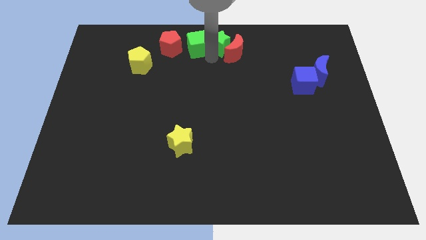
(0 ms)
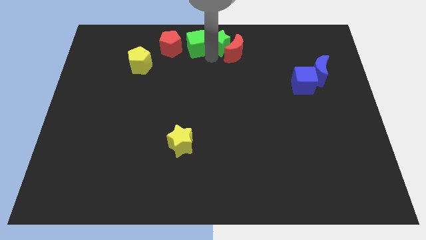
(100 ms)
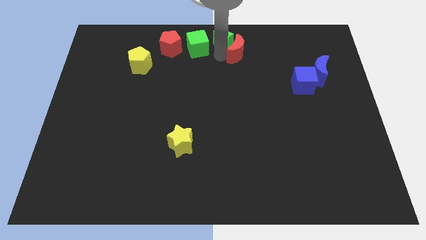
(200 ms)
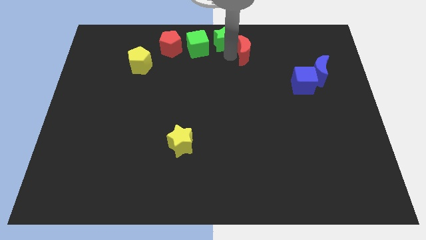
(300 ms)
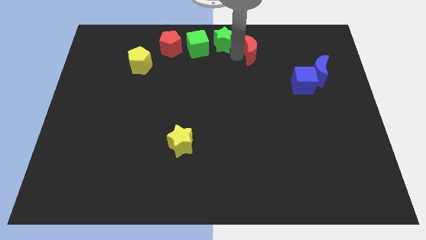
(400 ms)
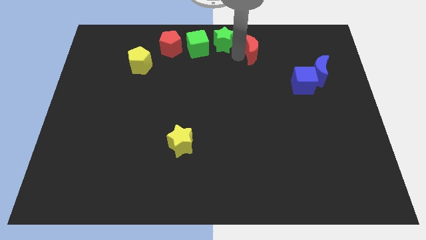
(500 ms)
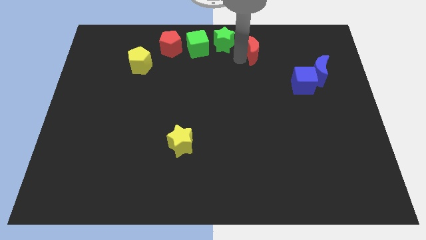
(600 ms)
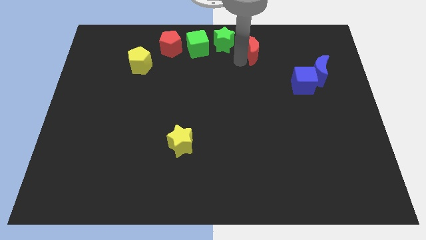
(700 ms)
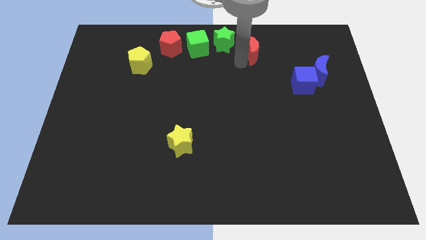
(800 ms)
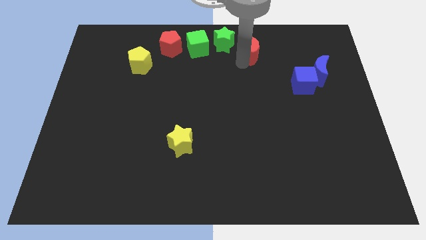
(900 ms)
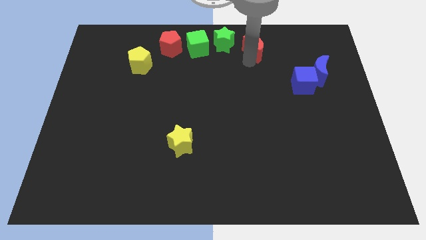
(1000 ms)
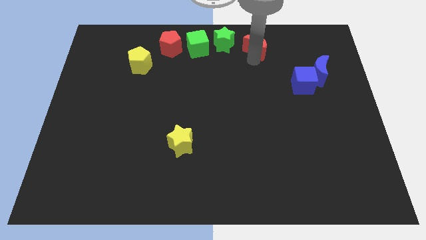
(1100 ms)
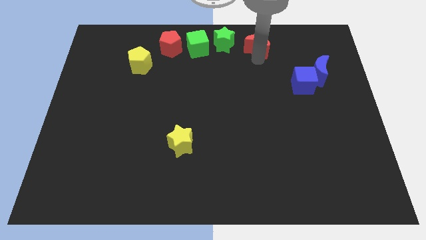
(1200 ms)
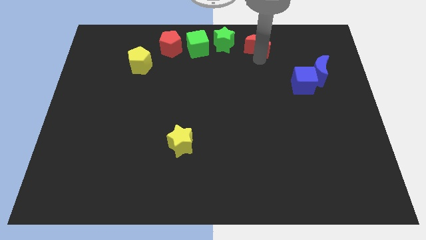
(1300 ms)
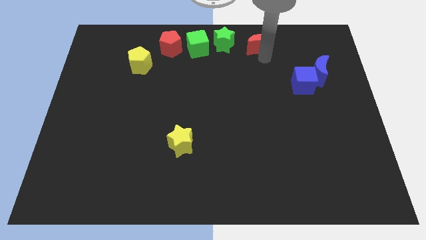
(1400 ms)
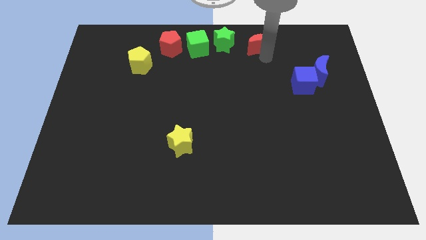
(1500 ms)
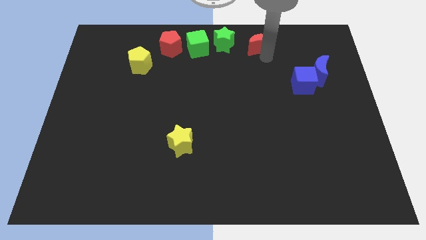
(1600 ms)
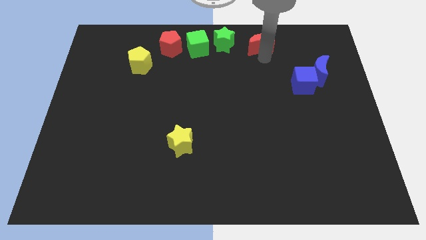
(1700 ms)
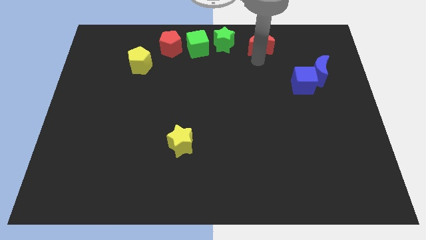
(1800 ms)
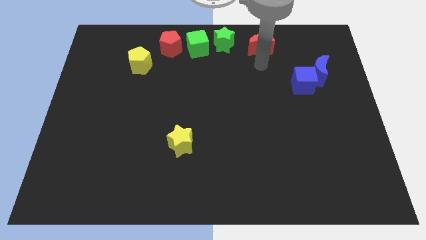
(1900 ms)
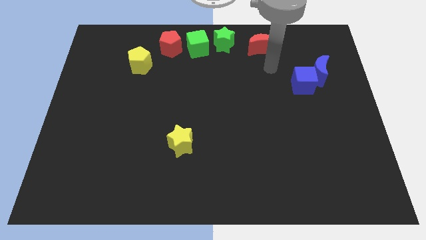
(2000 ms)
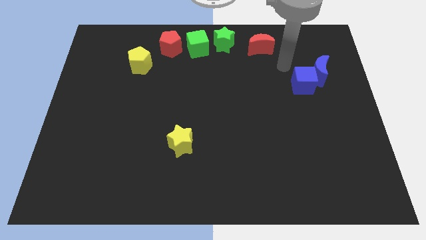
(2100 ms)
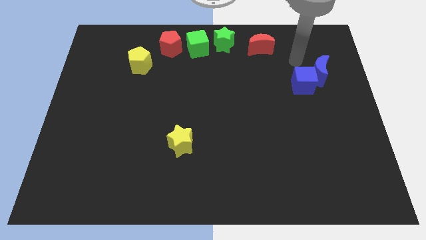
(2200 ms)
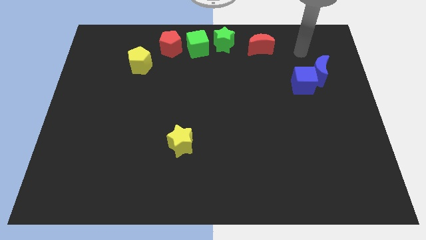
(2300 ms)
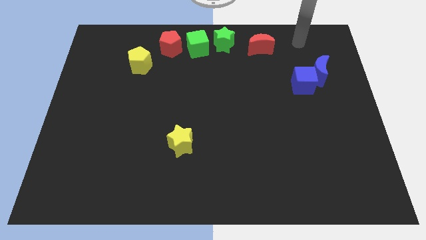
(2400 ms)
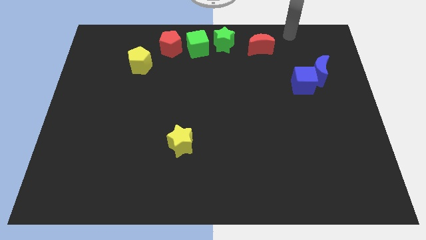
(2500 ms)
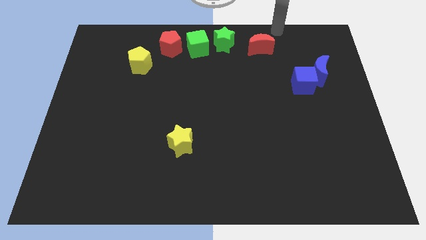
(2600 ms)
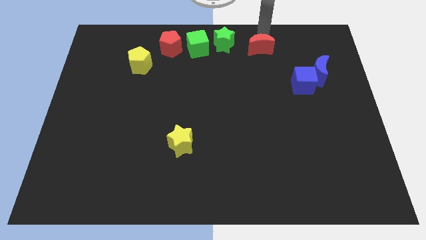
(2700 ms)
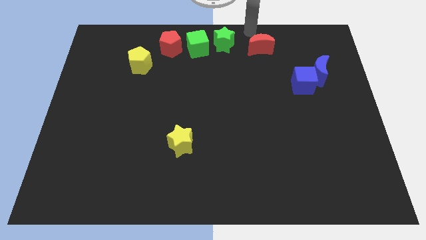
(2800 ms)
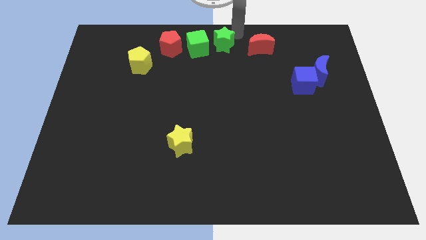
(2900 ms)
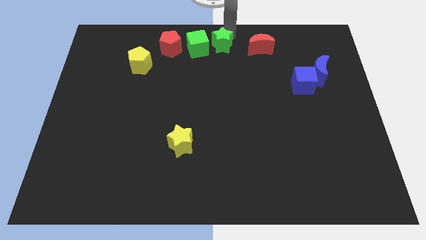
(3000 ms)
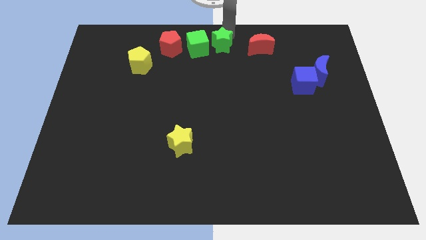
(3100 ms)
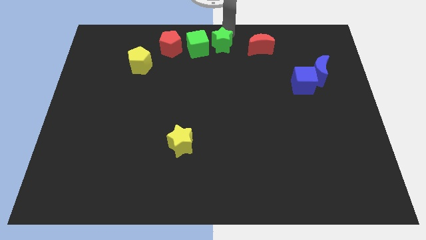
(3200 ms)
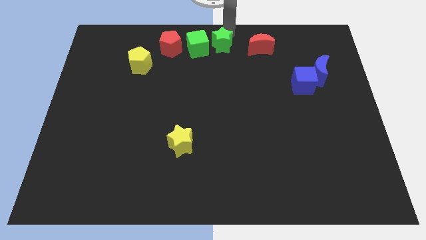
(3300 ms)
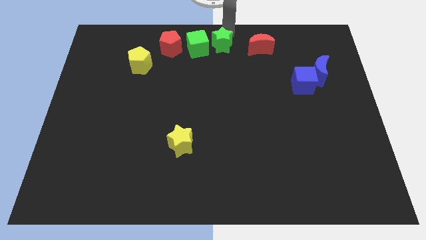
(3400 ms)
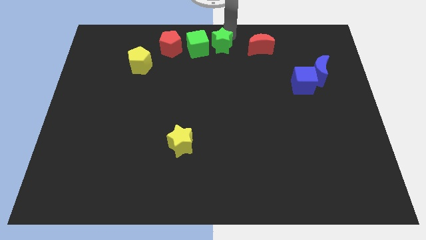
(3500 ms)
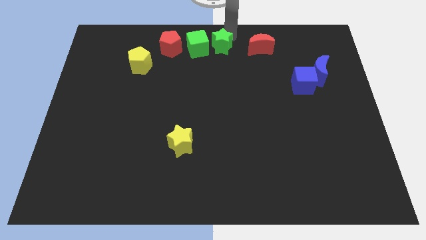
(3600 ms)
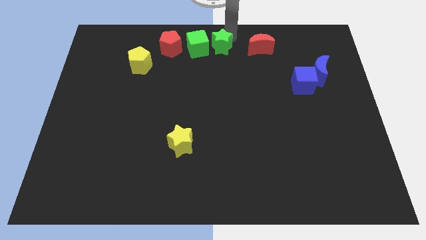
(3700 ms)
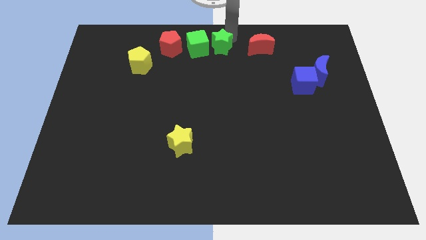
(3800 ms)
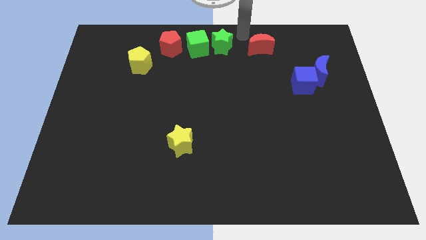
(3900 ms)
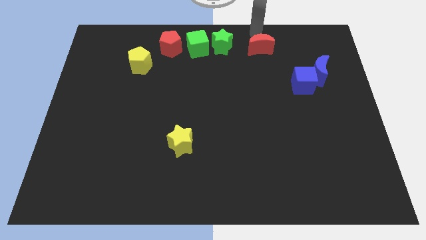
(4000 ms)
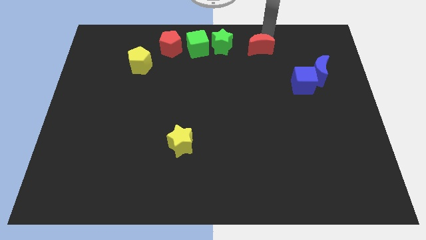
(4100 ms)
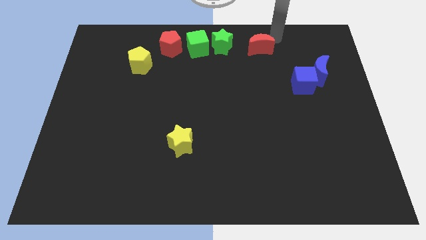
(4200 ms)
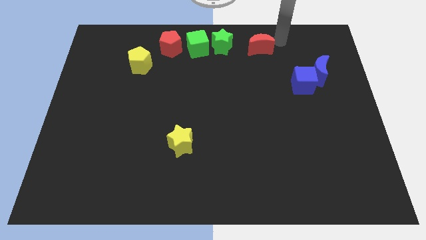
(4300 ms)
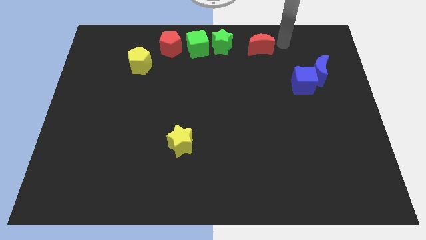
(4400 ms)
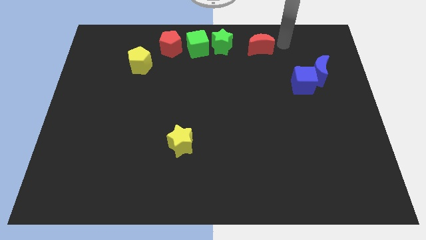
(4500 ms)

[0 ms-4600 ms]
adjust green blocks and the red moon away from each other

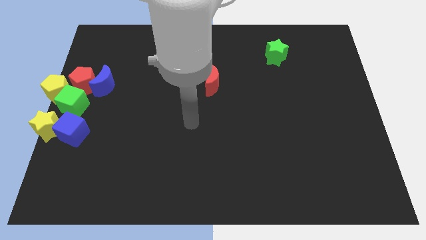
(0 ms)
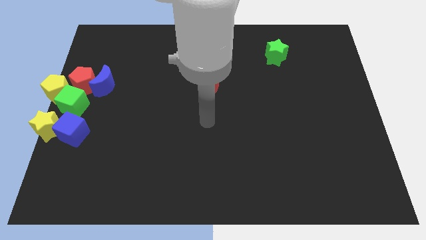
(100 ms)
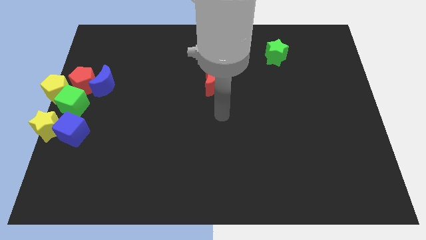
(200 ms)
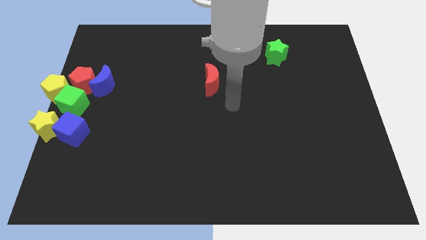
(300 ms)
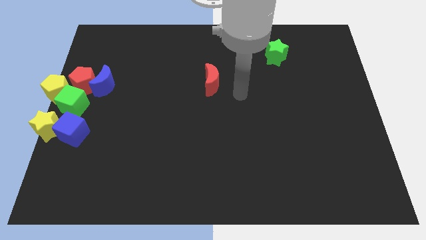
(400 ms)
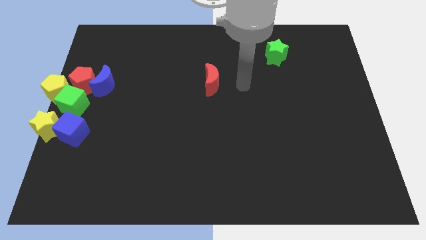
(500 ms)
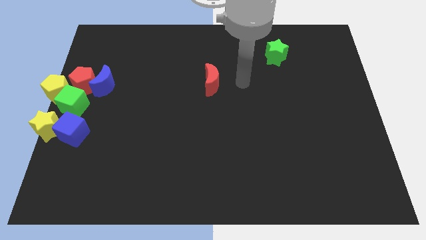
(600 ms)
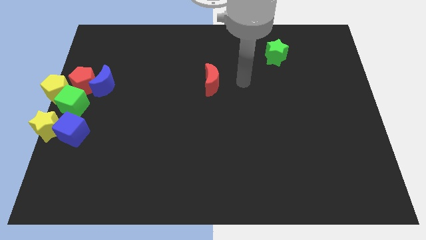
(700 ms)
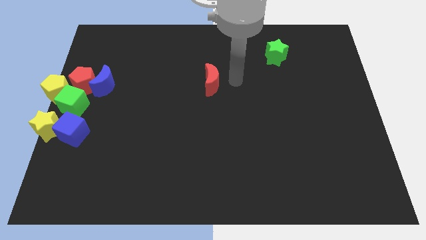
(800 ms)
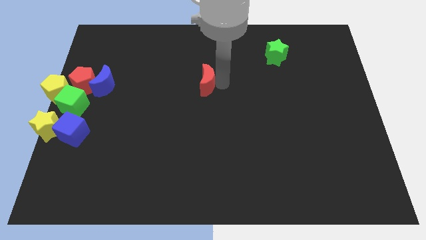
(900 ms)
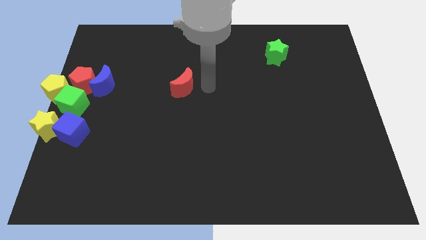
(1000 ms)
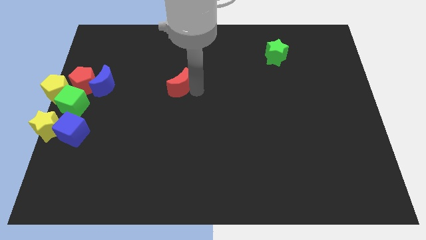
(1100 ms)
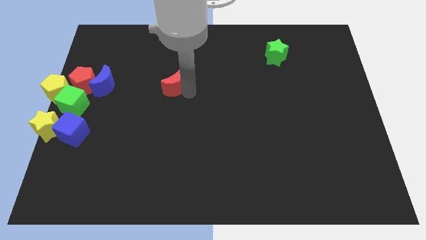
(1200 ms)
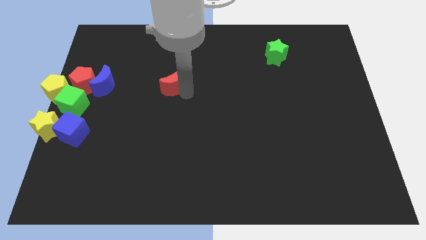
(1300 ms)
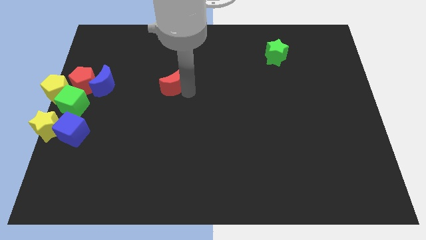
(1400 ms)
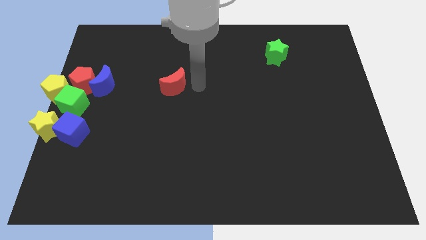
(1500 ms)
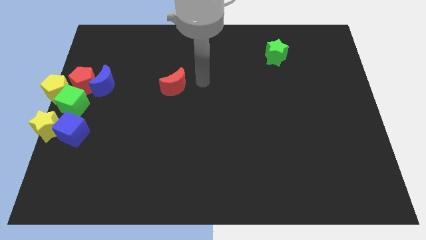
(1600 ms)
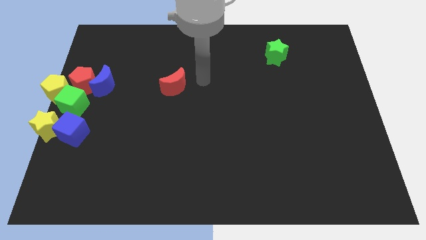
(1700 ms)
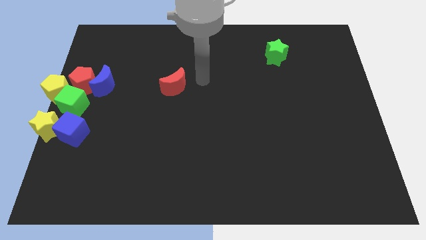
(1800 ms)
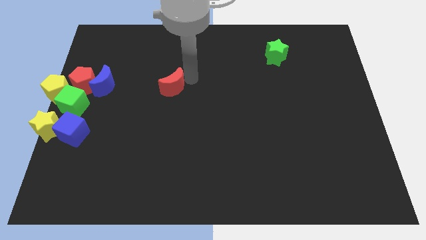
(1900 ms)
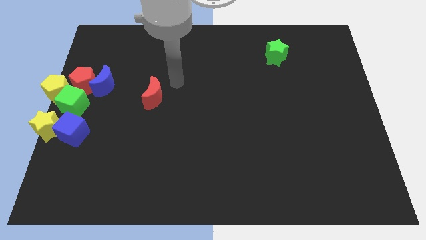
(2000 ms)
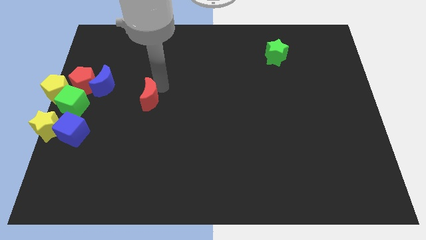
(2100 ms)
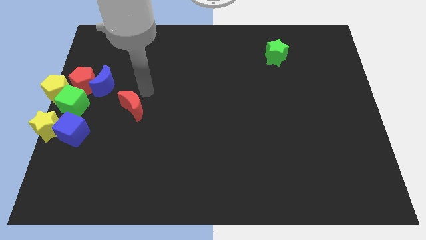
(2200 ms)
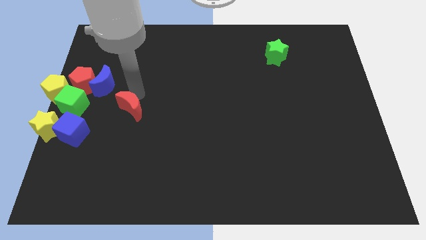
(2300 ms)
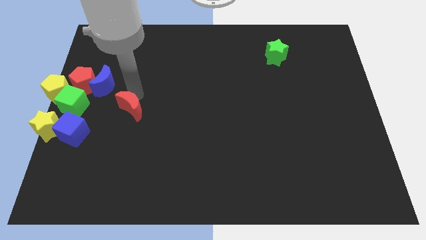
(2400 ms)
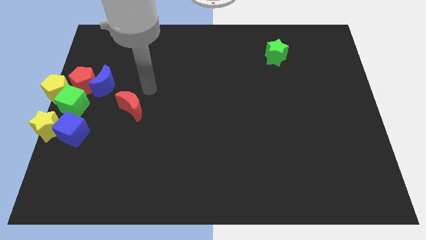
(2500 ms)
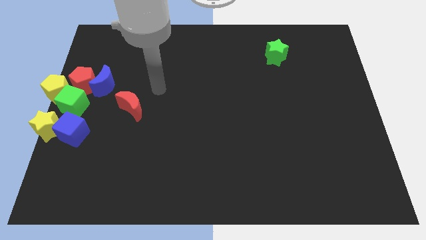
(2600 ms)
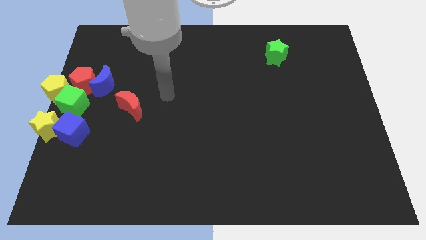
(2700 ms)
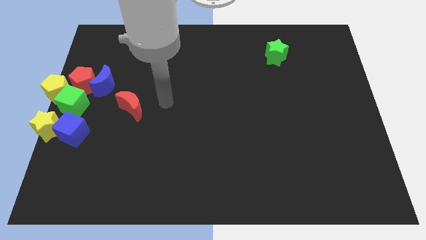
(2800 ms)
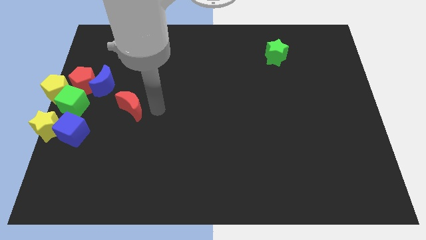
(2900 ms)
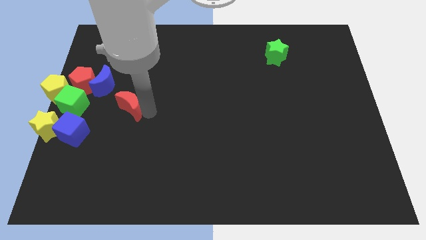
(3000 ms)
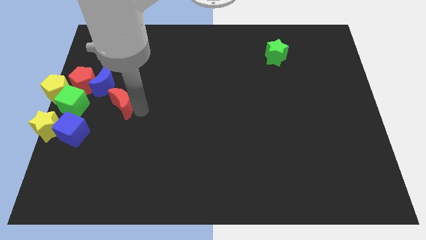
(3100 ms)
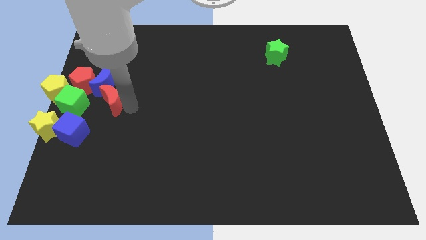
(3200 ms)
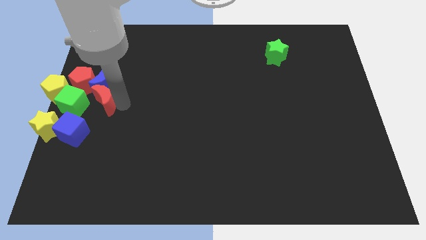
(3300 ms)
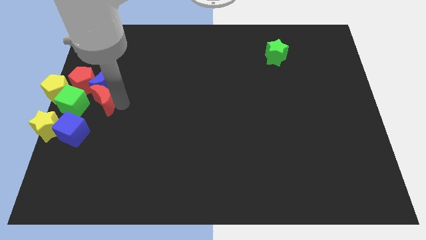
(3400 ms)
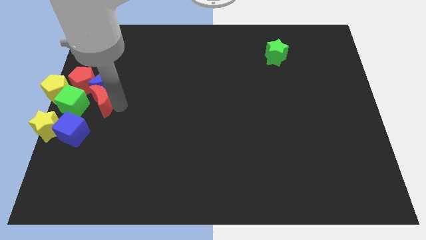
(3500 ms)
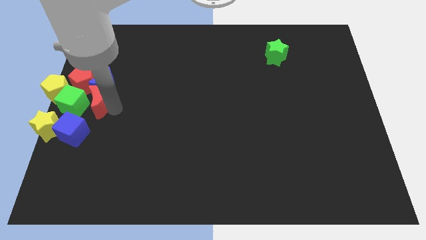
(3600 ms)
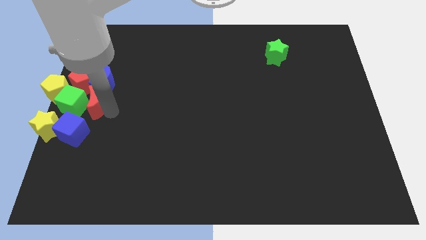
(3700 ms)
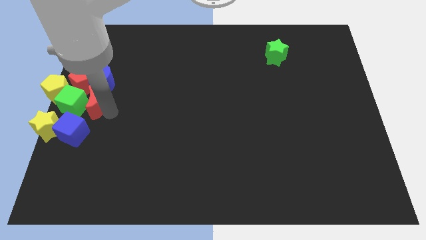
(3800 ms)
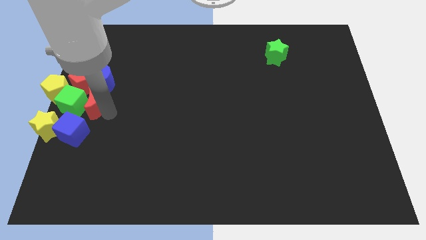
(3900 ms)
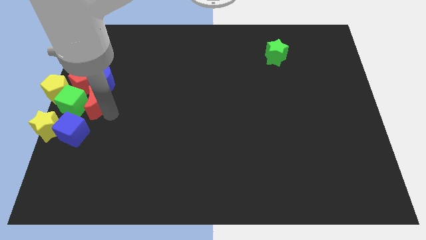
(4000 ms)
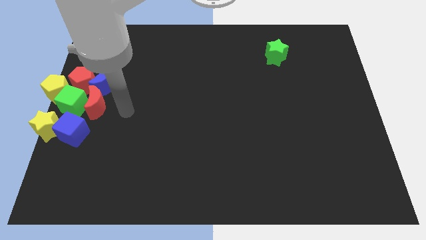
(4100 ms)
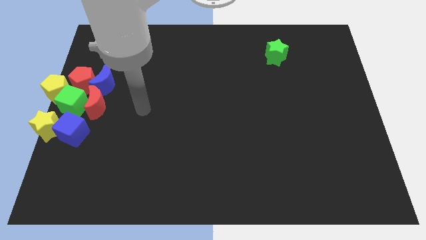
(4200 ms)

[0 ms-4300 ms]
push the red moon to the right side of the green cube

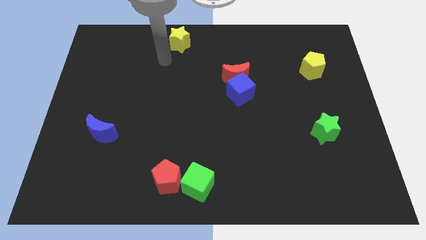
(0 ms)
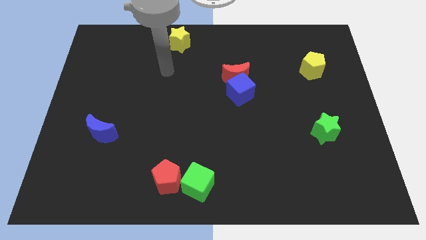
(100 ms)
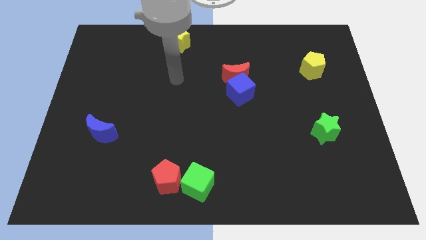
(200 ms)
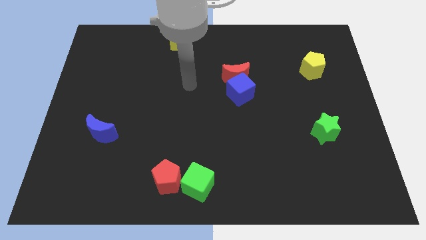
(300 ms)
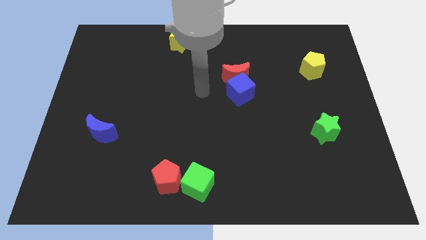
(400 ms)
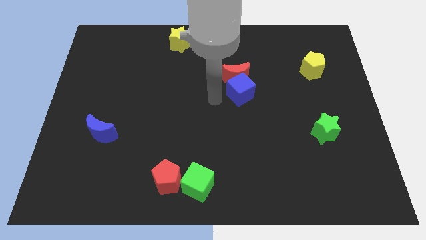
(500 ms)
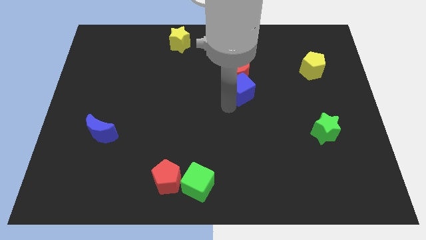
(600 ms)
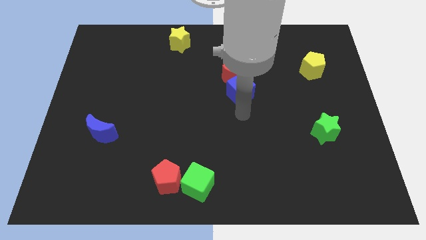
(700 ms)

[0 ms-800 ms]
place your hand under the blue cube
